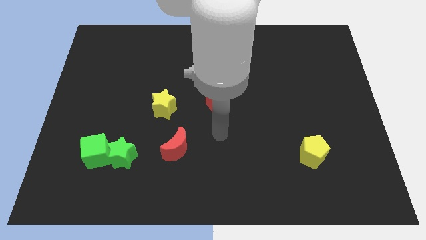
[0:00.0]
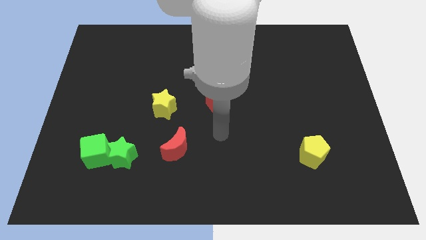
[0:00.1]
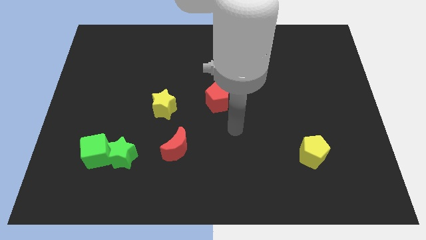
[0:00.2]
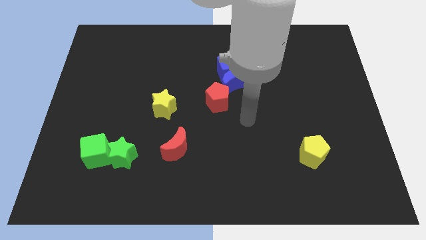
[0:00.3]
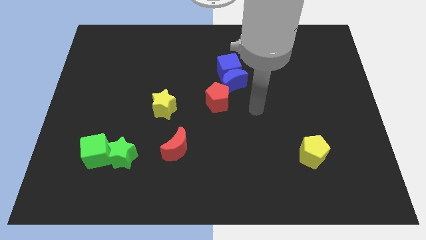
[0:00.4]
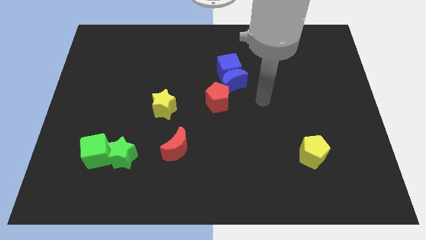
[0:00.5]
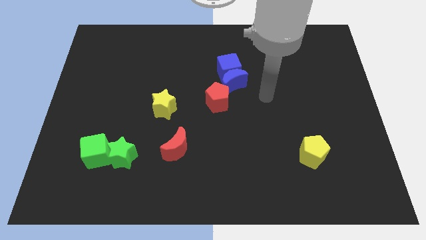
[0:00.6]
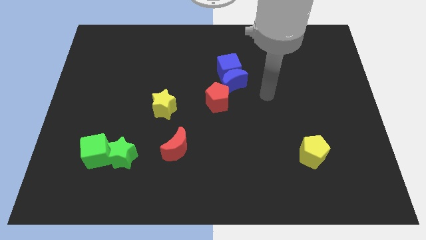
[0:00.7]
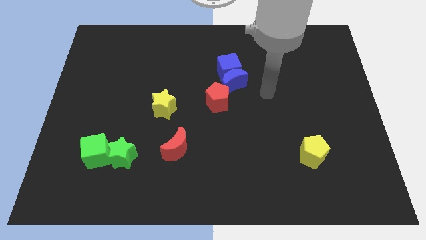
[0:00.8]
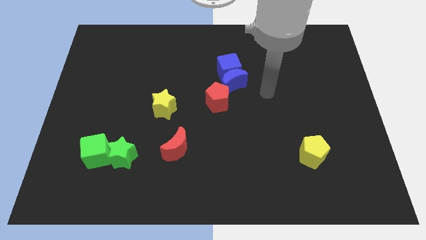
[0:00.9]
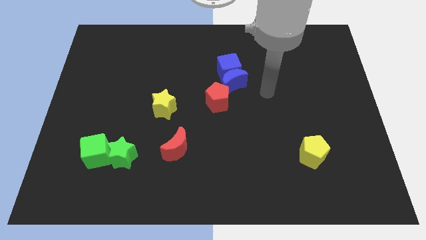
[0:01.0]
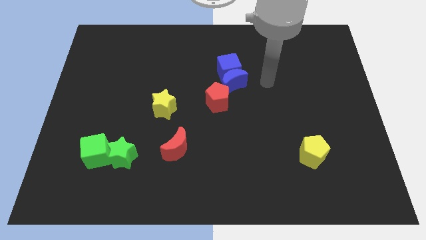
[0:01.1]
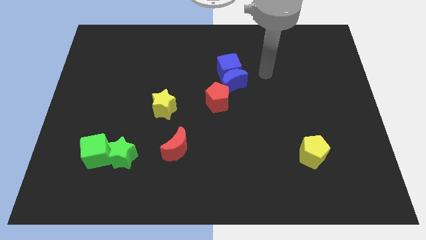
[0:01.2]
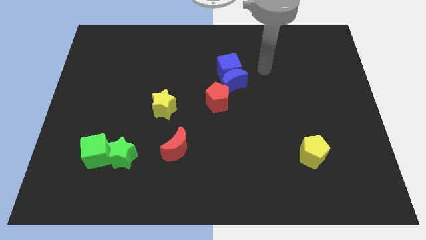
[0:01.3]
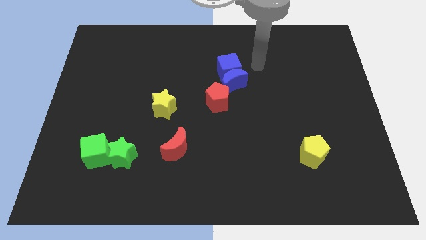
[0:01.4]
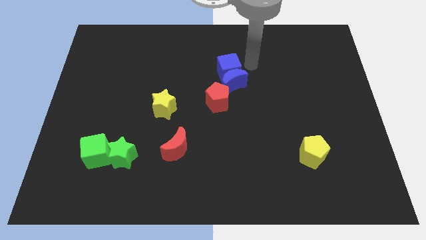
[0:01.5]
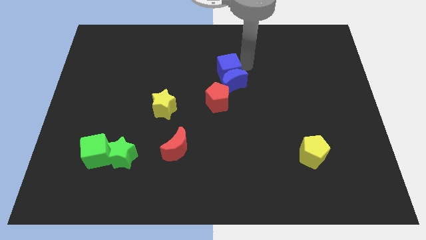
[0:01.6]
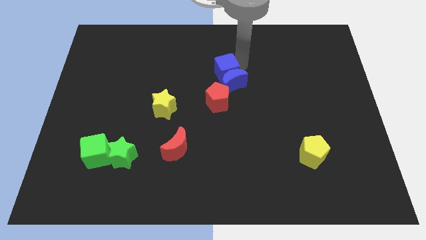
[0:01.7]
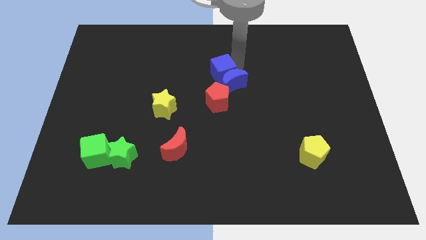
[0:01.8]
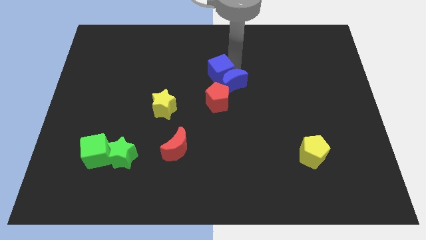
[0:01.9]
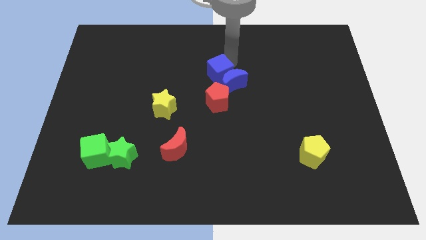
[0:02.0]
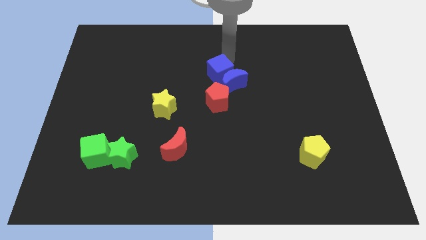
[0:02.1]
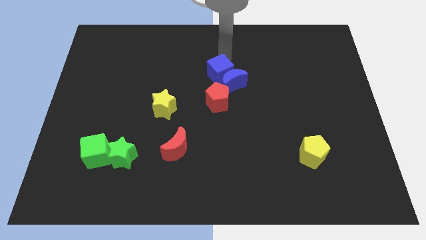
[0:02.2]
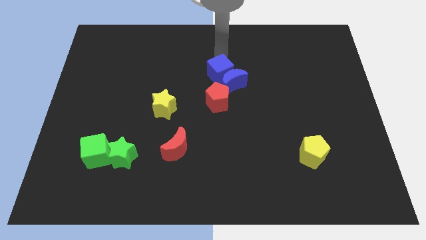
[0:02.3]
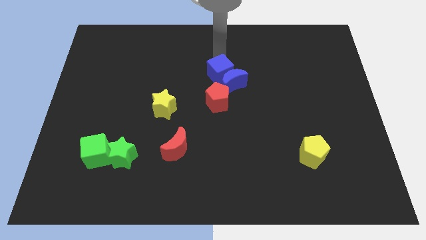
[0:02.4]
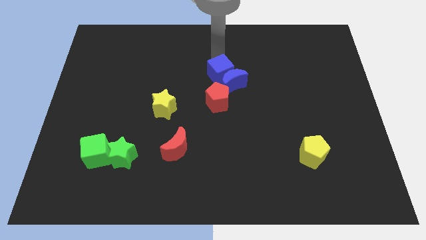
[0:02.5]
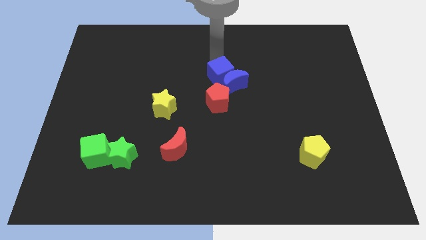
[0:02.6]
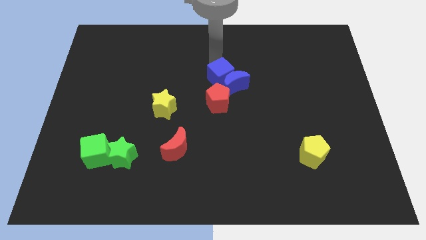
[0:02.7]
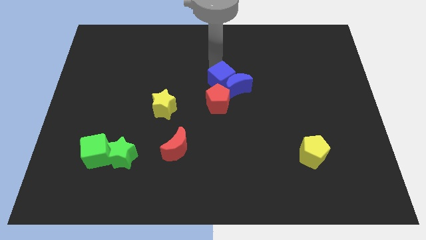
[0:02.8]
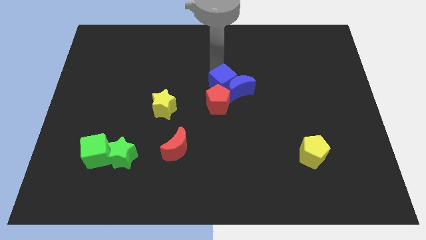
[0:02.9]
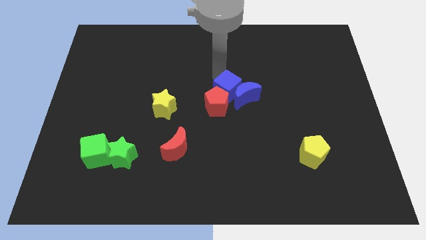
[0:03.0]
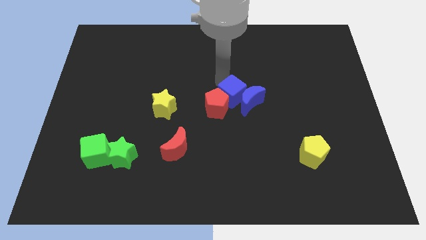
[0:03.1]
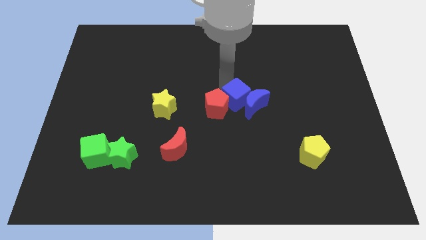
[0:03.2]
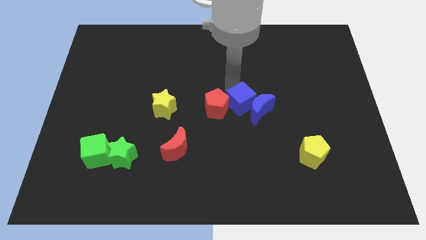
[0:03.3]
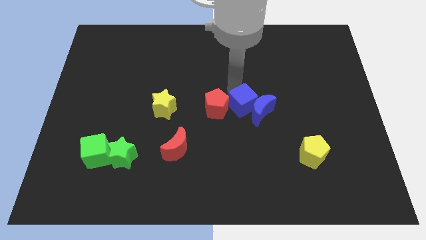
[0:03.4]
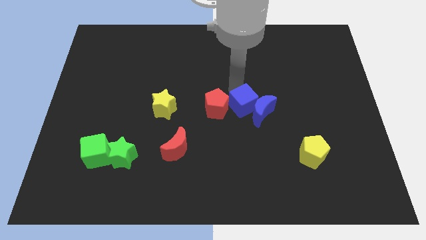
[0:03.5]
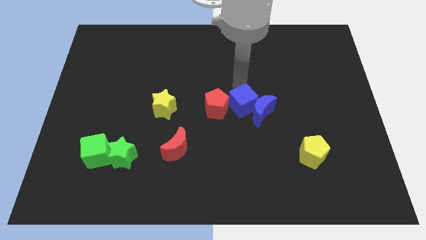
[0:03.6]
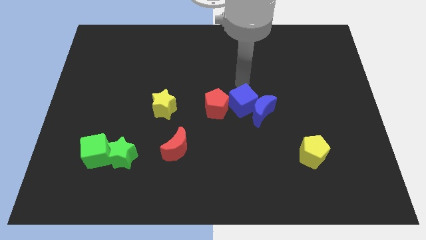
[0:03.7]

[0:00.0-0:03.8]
push the blue cube right to the red pentagon

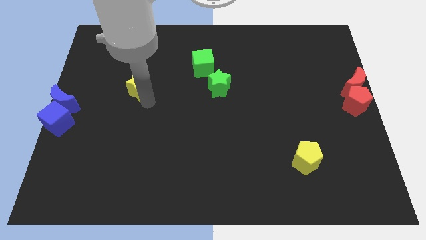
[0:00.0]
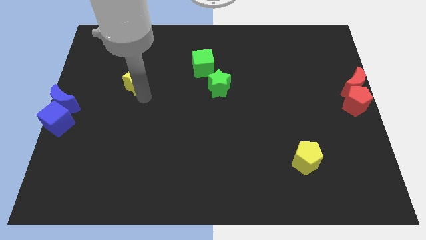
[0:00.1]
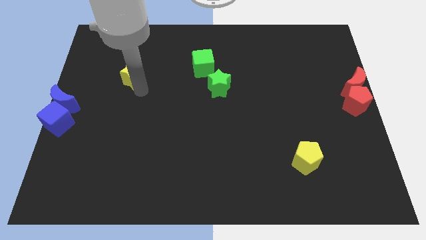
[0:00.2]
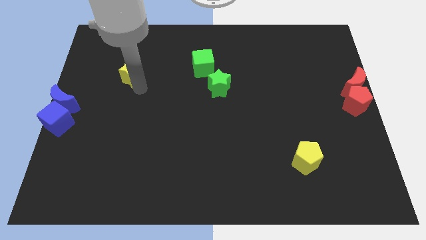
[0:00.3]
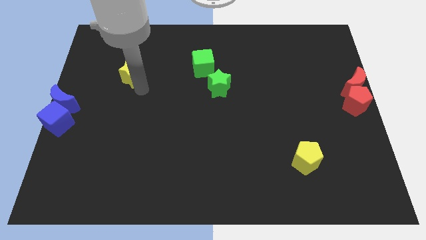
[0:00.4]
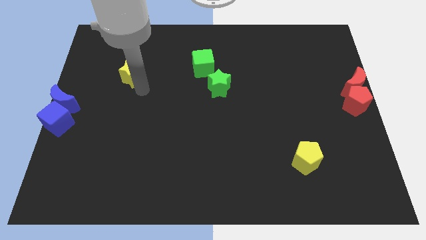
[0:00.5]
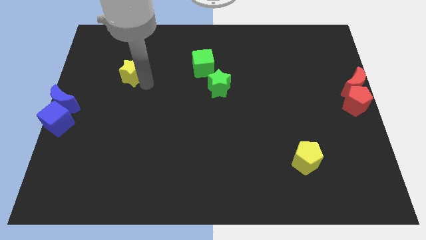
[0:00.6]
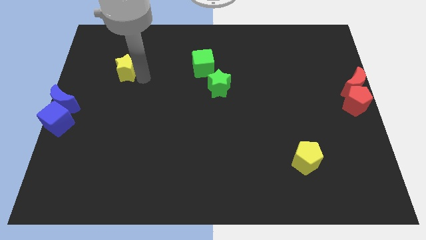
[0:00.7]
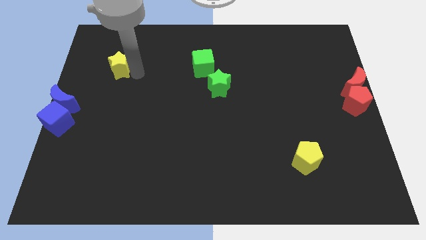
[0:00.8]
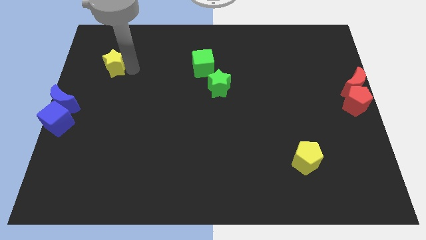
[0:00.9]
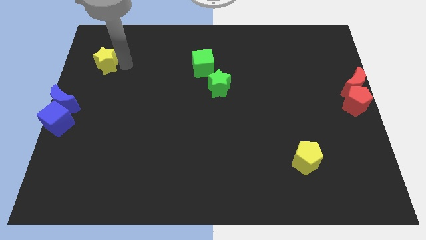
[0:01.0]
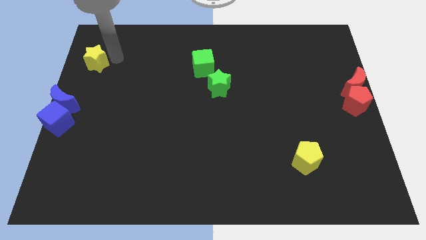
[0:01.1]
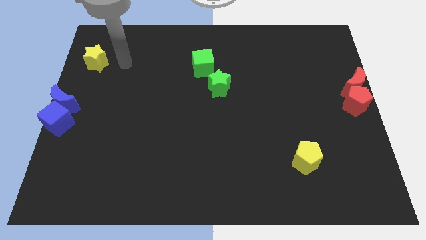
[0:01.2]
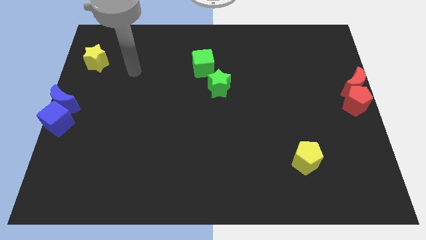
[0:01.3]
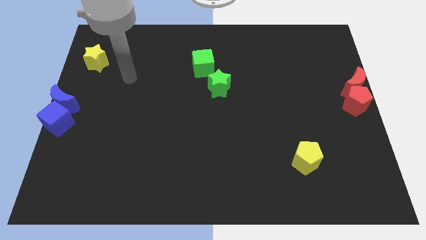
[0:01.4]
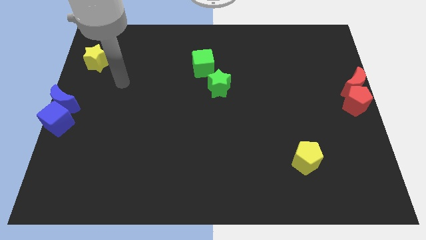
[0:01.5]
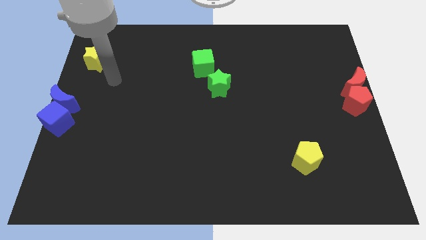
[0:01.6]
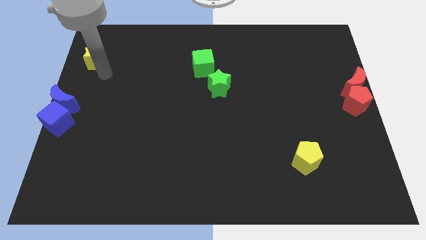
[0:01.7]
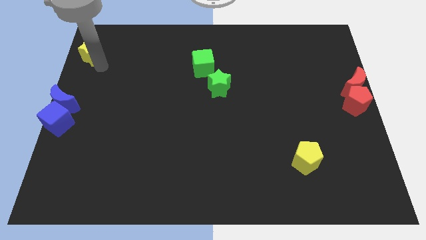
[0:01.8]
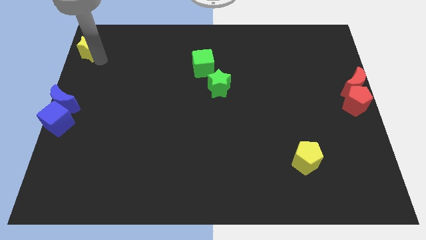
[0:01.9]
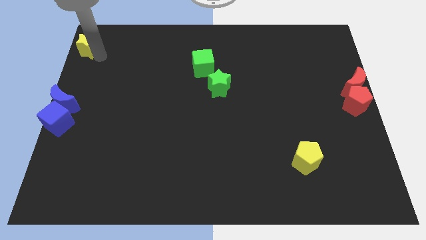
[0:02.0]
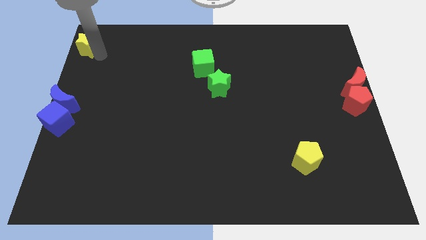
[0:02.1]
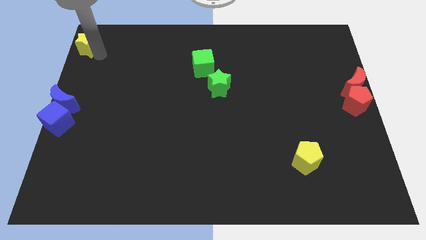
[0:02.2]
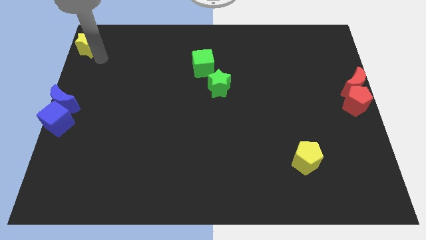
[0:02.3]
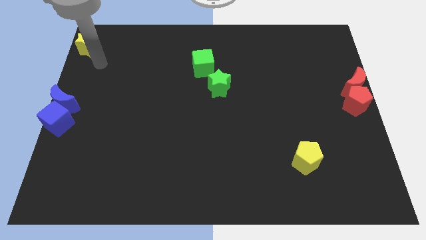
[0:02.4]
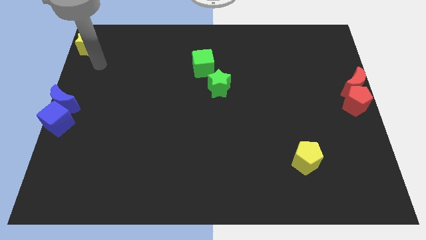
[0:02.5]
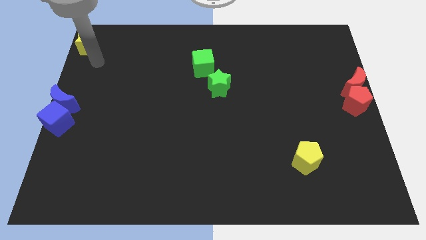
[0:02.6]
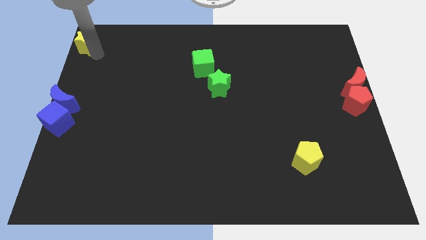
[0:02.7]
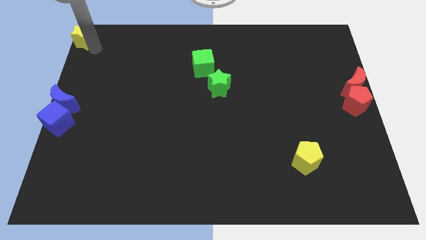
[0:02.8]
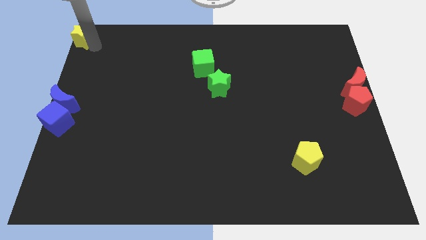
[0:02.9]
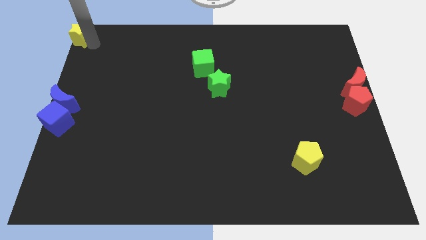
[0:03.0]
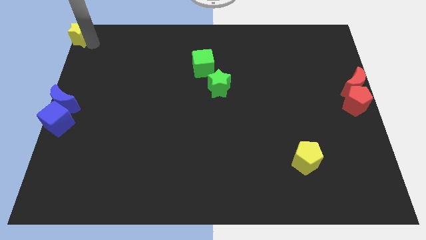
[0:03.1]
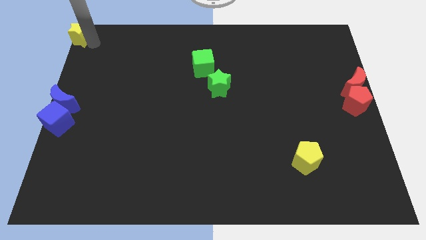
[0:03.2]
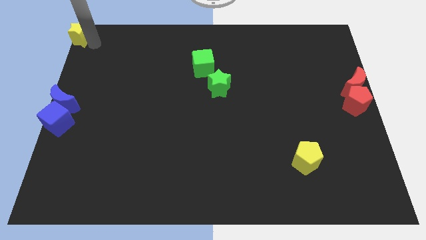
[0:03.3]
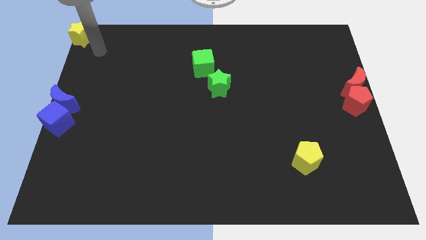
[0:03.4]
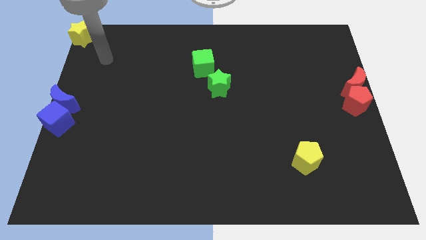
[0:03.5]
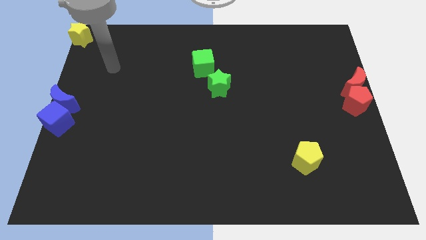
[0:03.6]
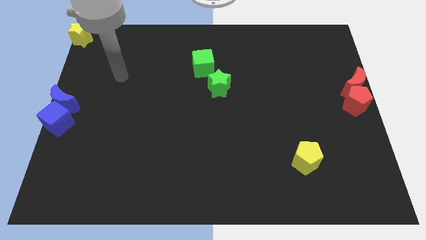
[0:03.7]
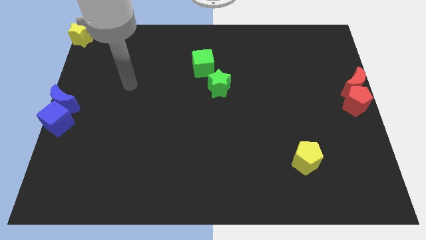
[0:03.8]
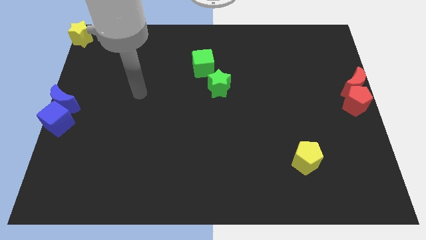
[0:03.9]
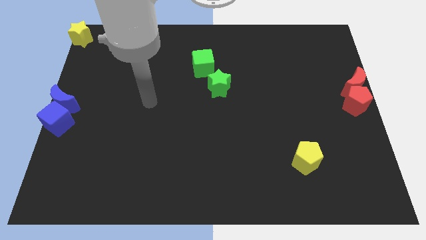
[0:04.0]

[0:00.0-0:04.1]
push the yellow star to the top left corner of the board

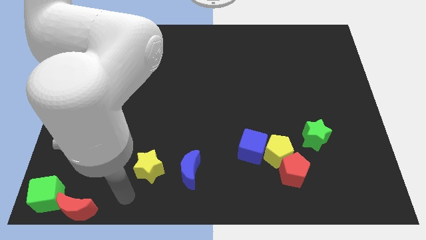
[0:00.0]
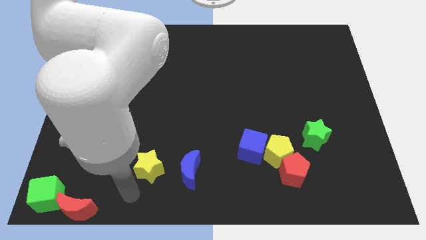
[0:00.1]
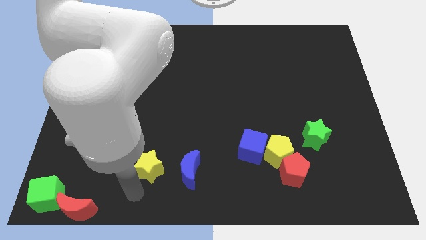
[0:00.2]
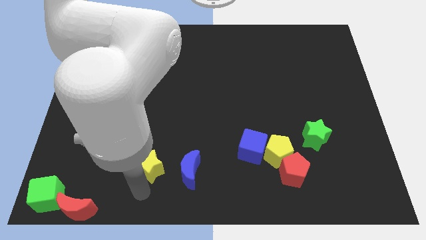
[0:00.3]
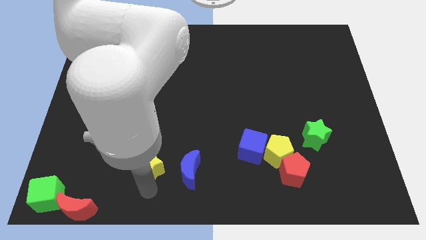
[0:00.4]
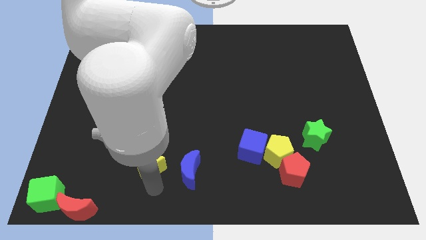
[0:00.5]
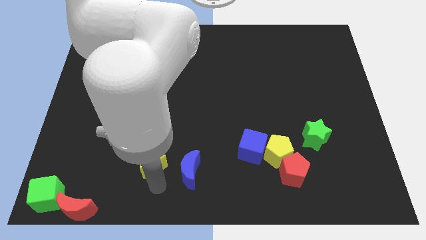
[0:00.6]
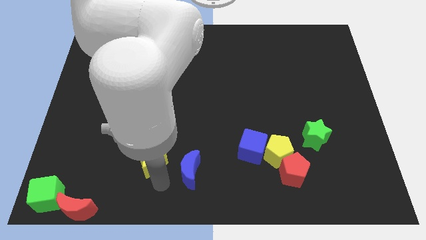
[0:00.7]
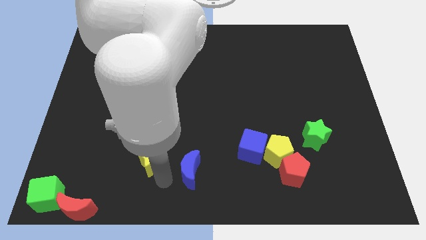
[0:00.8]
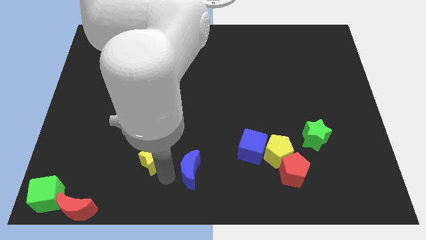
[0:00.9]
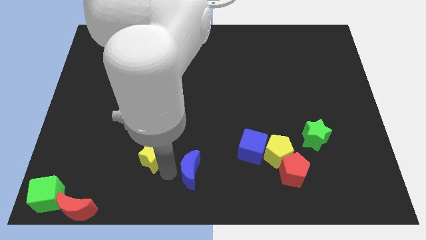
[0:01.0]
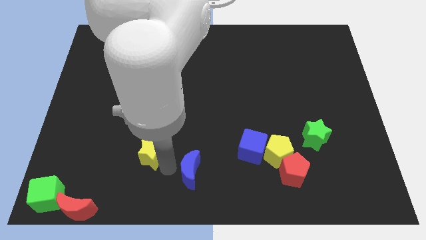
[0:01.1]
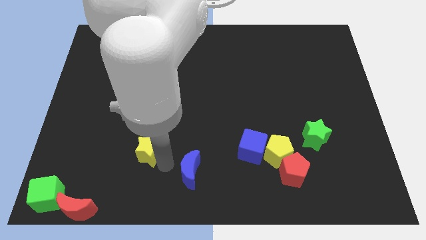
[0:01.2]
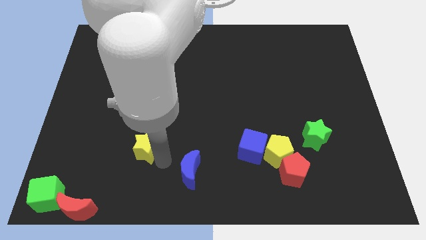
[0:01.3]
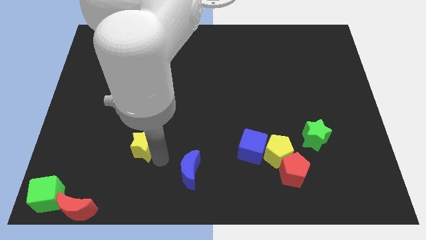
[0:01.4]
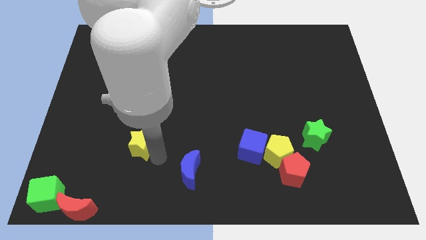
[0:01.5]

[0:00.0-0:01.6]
slightly push the yellow star
